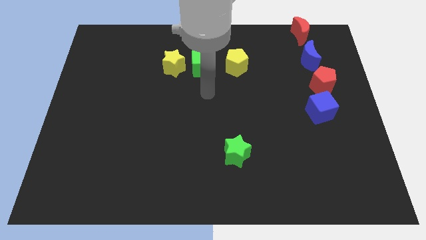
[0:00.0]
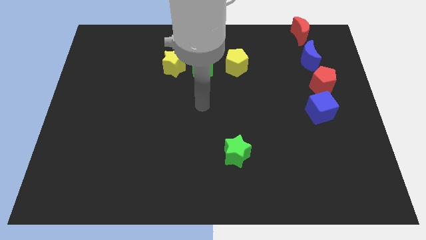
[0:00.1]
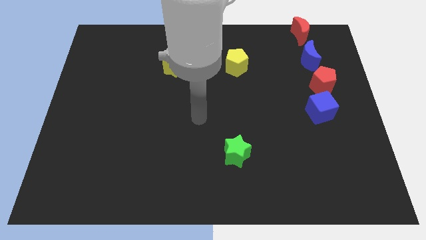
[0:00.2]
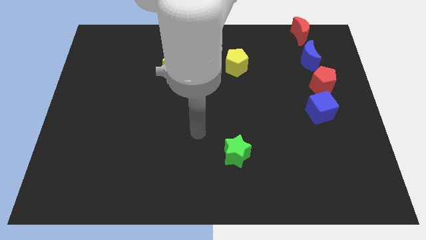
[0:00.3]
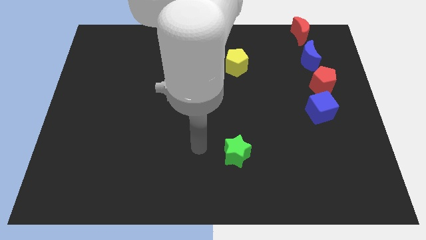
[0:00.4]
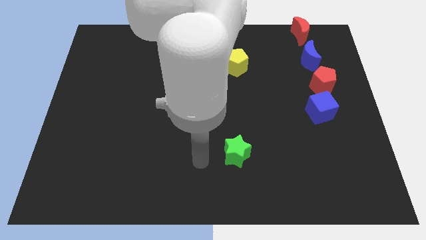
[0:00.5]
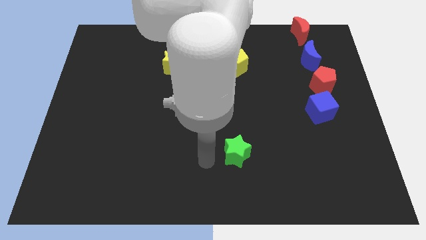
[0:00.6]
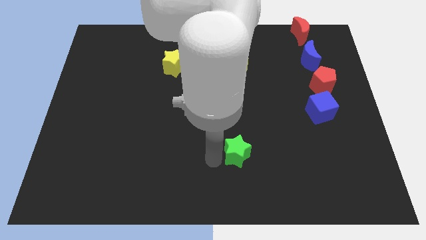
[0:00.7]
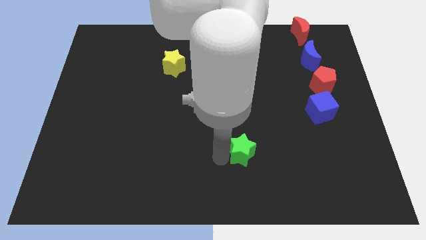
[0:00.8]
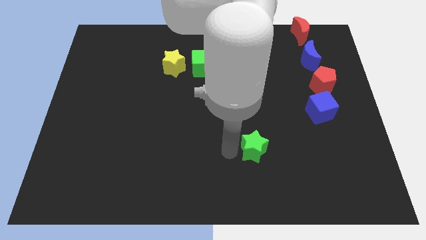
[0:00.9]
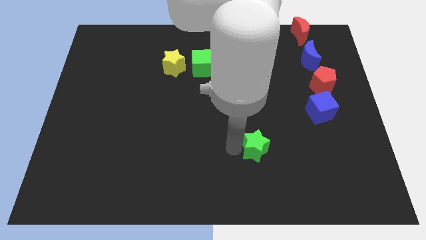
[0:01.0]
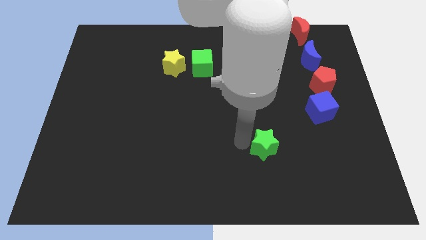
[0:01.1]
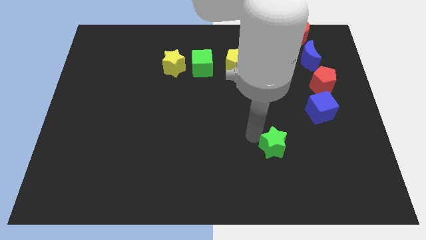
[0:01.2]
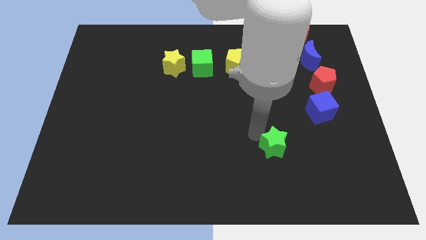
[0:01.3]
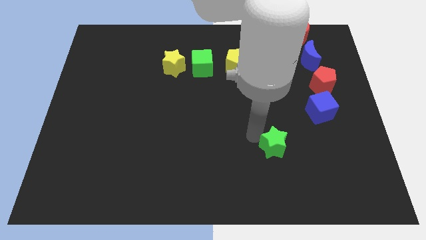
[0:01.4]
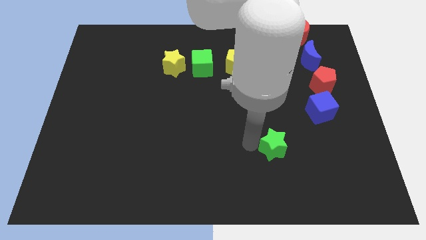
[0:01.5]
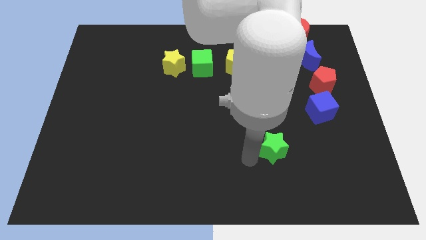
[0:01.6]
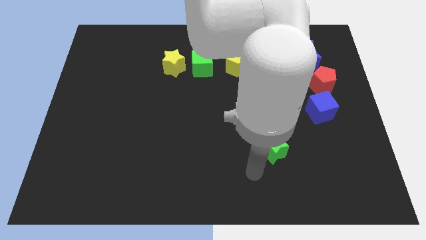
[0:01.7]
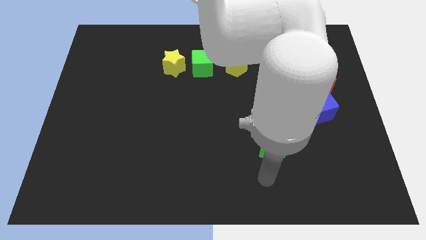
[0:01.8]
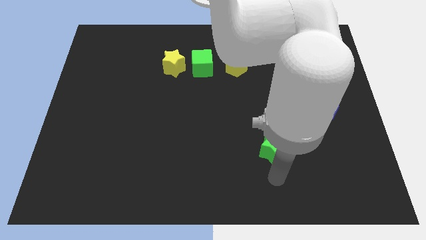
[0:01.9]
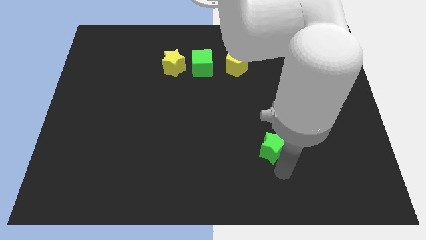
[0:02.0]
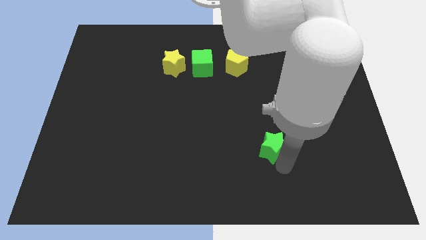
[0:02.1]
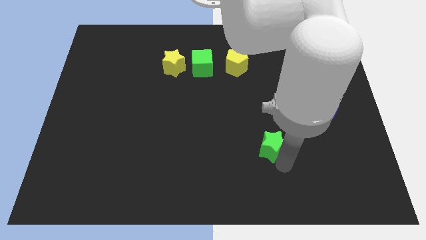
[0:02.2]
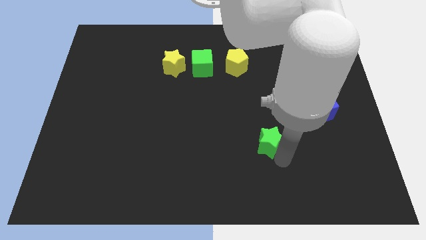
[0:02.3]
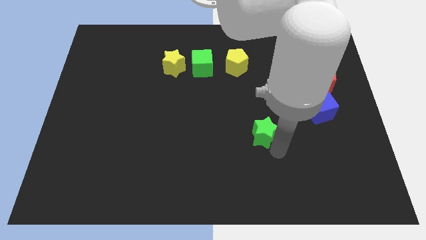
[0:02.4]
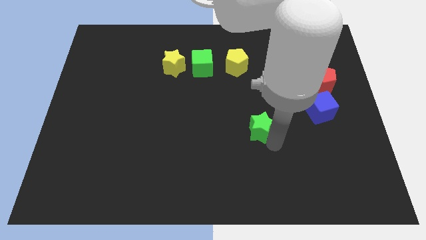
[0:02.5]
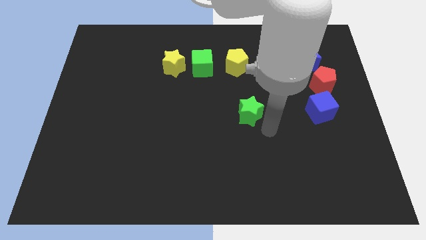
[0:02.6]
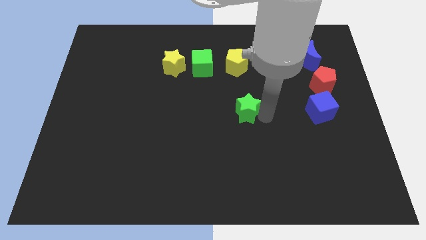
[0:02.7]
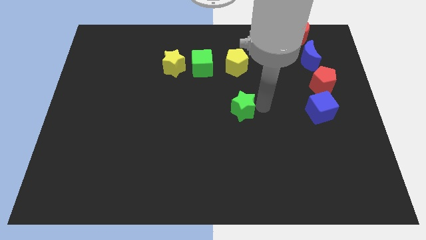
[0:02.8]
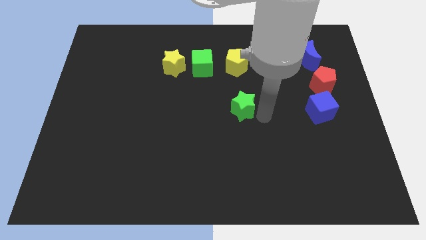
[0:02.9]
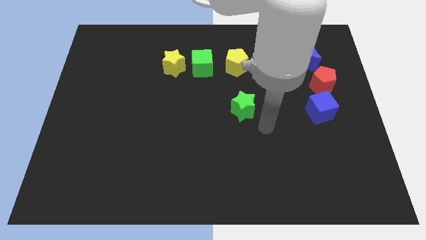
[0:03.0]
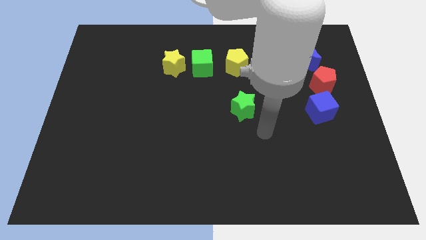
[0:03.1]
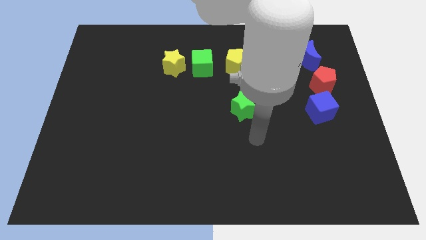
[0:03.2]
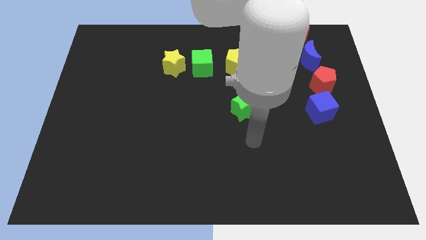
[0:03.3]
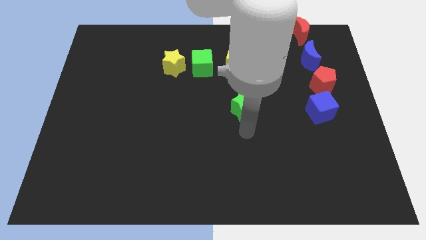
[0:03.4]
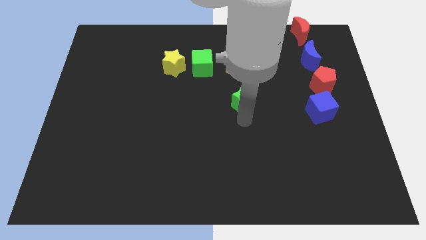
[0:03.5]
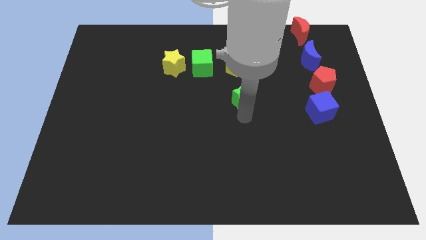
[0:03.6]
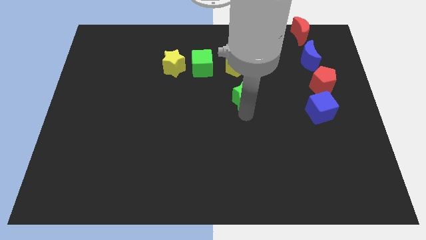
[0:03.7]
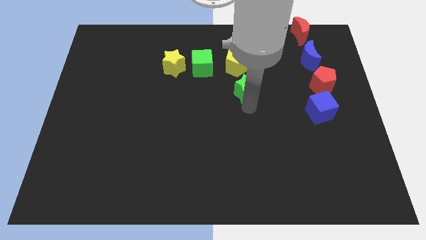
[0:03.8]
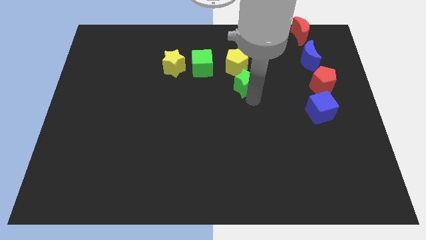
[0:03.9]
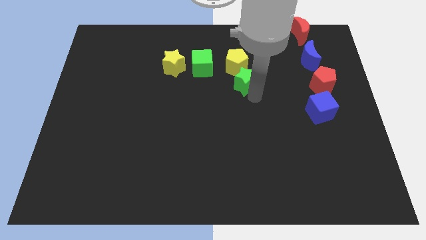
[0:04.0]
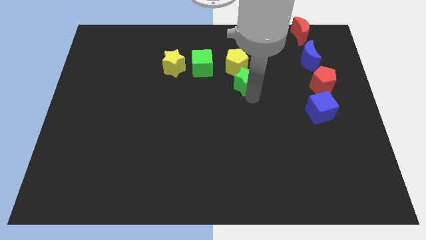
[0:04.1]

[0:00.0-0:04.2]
move the green star below the yellow pentagon

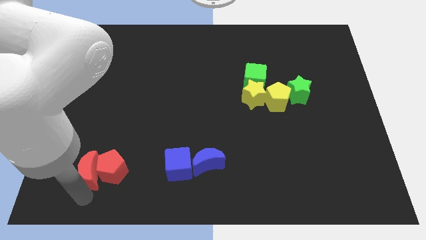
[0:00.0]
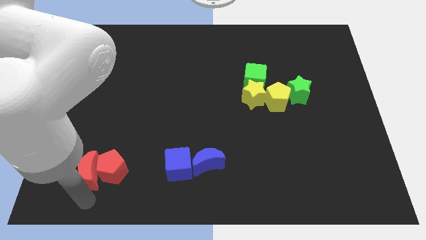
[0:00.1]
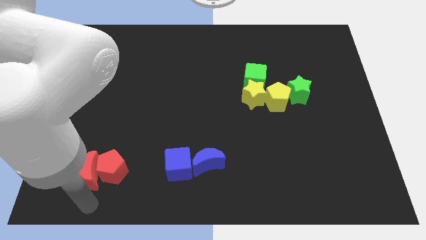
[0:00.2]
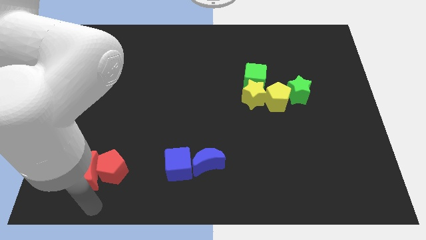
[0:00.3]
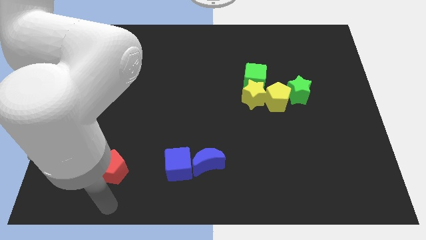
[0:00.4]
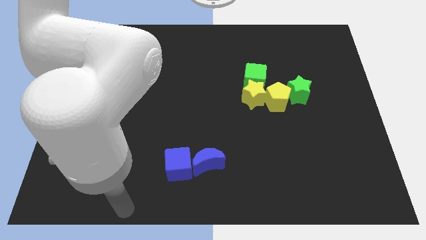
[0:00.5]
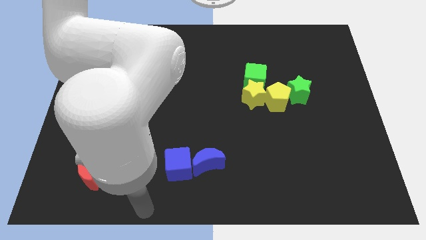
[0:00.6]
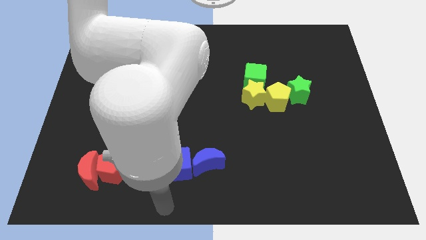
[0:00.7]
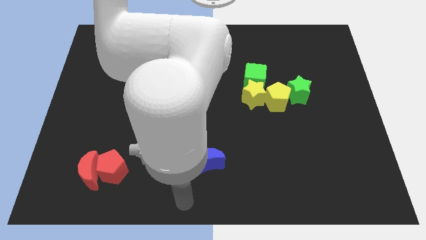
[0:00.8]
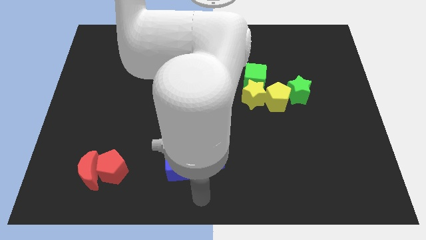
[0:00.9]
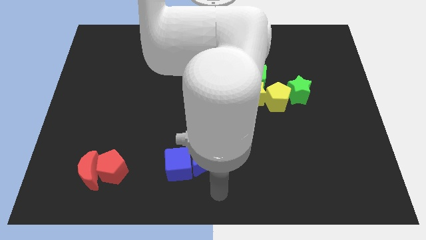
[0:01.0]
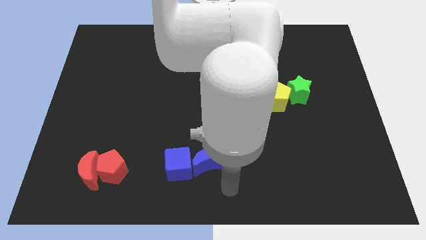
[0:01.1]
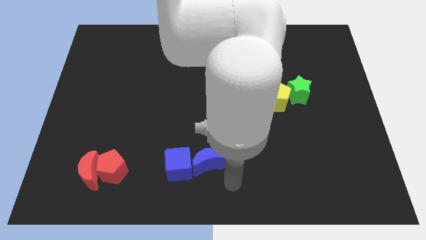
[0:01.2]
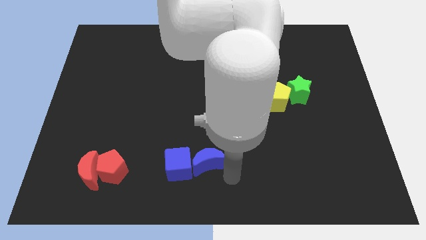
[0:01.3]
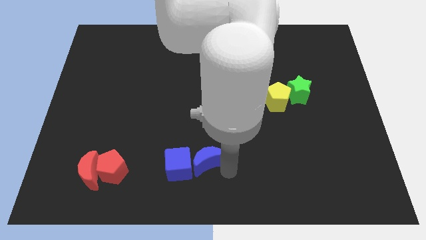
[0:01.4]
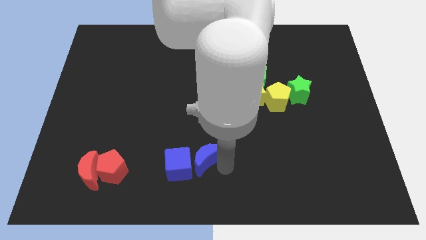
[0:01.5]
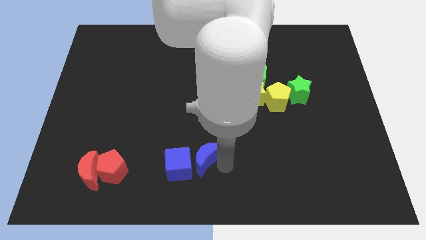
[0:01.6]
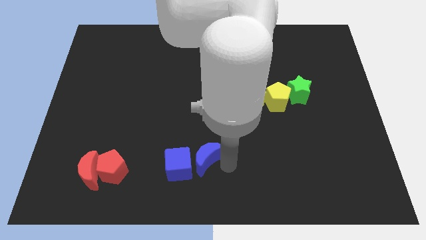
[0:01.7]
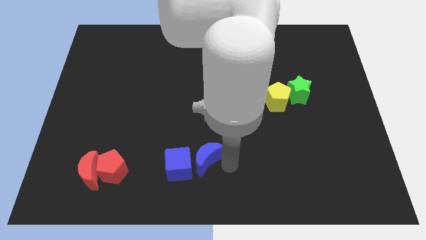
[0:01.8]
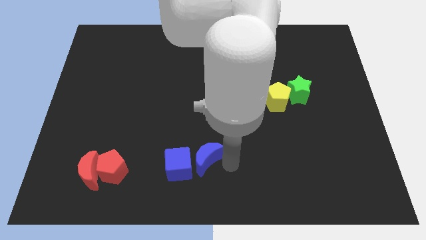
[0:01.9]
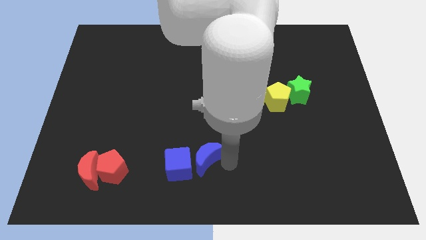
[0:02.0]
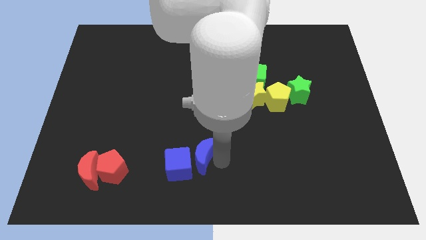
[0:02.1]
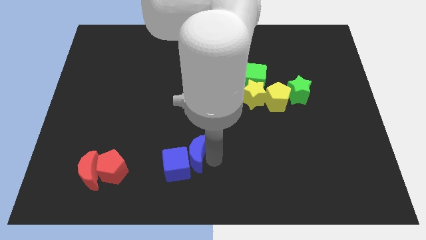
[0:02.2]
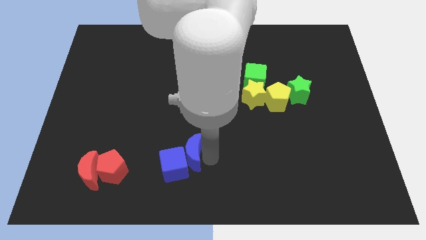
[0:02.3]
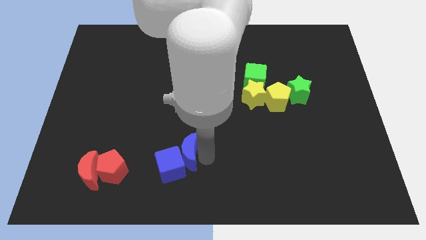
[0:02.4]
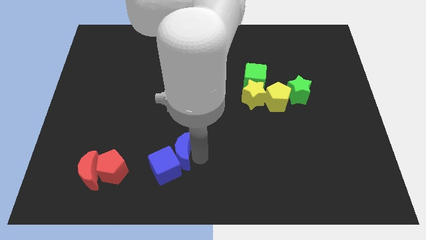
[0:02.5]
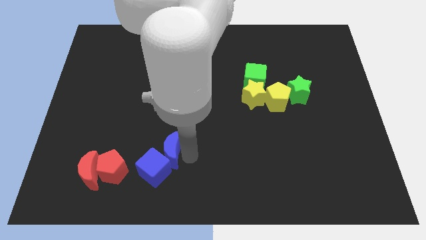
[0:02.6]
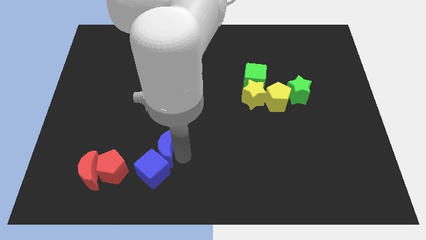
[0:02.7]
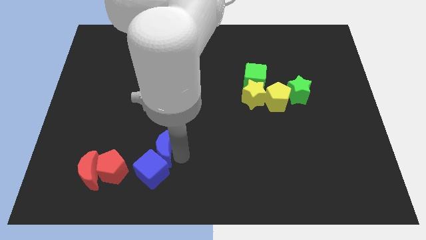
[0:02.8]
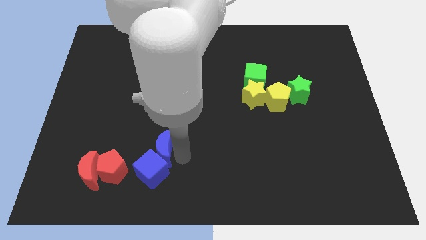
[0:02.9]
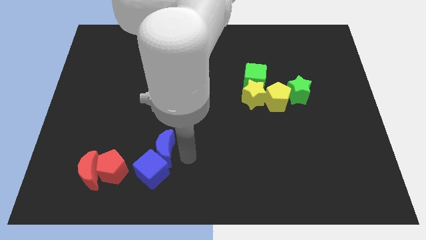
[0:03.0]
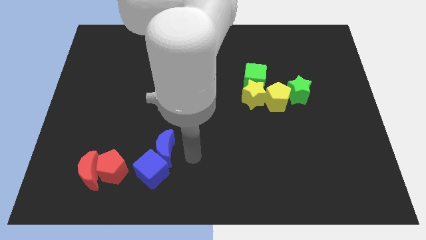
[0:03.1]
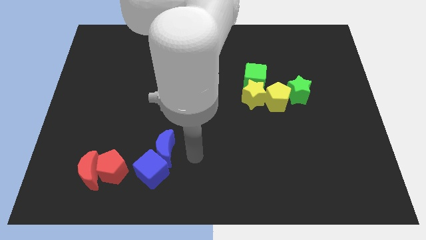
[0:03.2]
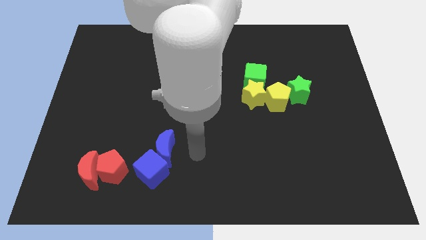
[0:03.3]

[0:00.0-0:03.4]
move the blue blocks right to the red blocks

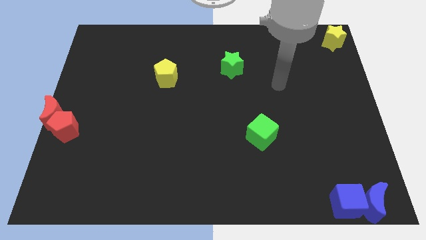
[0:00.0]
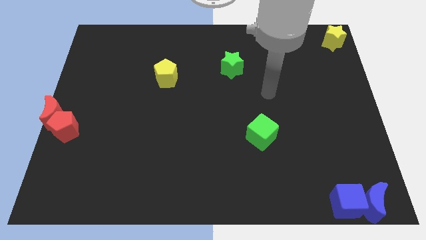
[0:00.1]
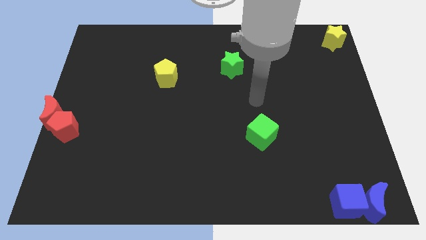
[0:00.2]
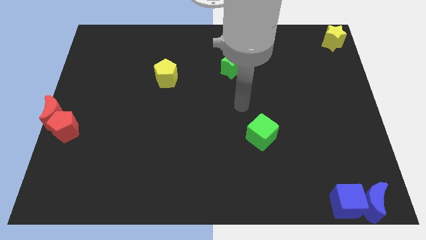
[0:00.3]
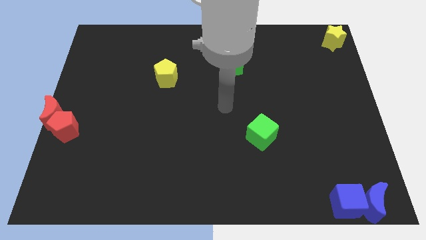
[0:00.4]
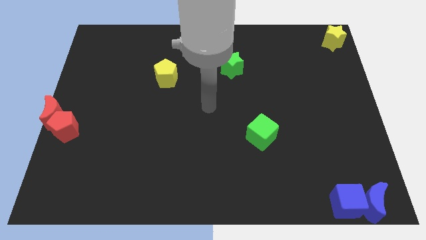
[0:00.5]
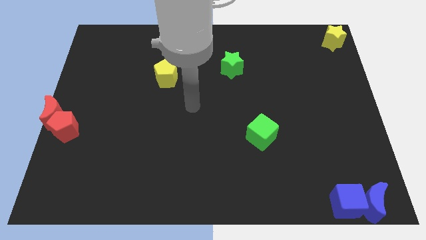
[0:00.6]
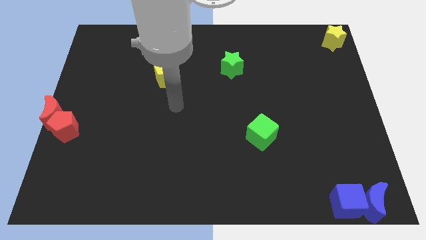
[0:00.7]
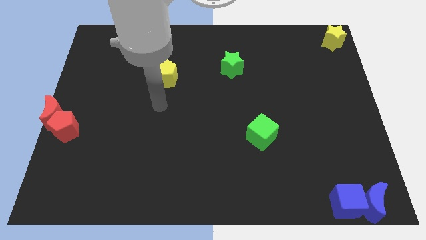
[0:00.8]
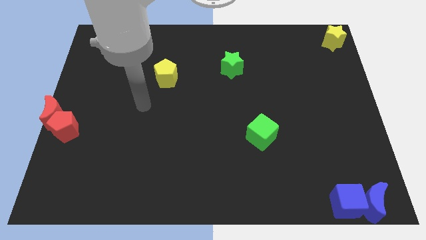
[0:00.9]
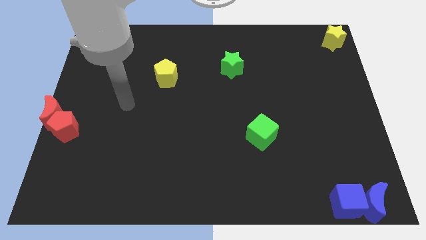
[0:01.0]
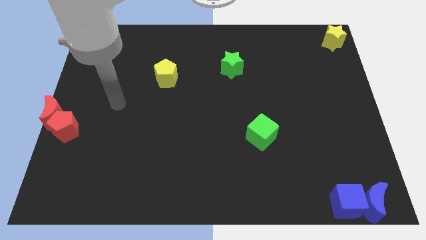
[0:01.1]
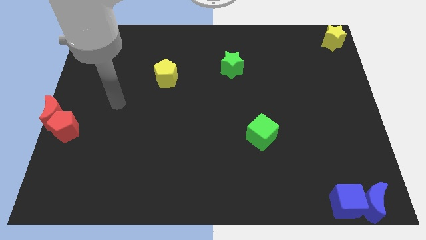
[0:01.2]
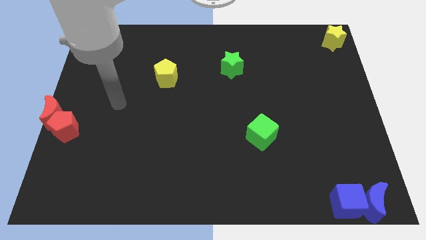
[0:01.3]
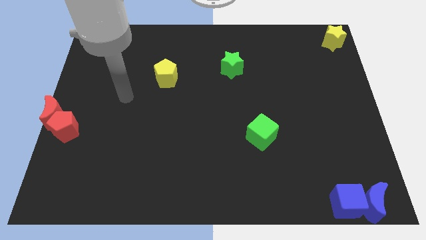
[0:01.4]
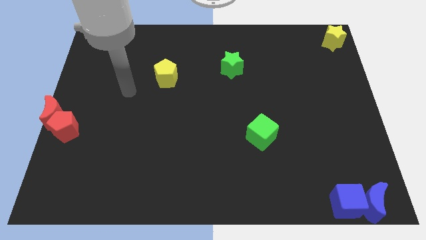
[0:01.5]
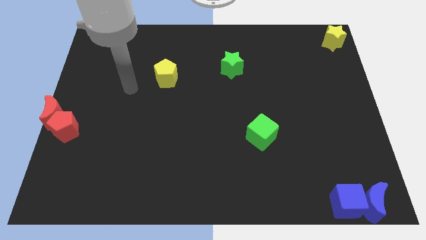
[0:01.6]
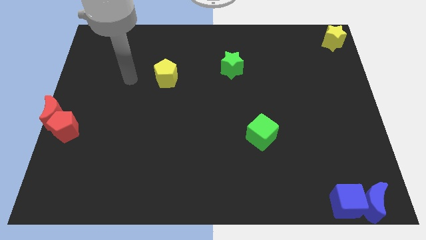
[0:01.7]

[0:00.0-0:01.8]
point your hand at the left of the yellow pentagon
